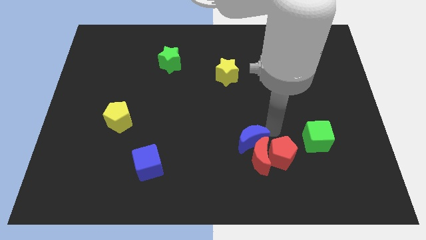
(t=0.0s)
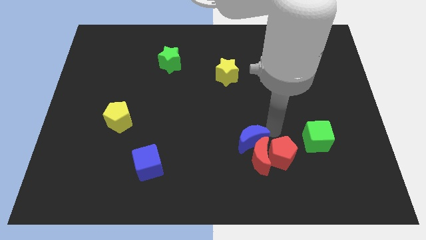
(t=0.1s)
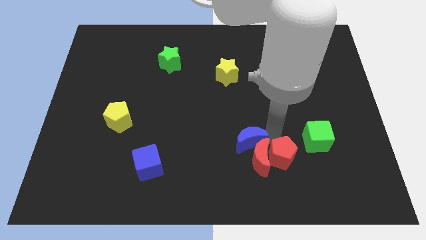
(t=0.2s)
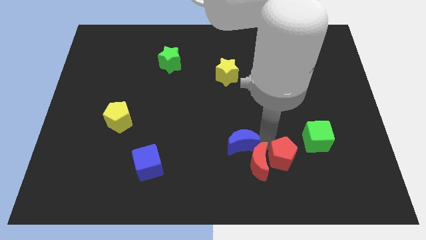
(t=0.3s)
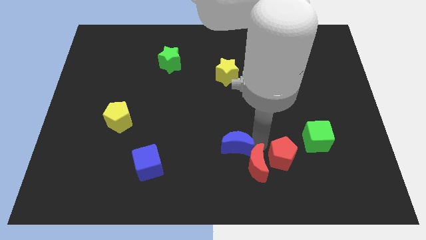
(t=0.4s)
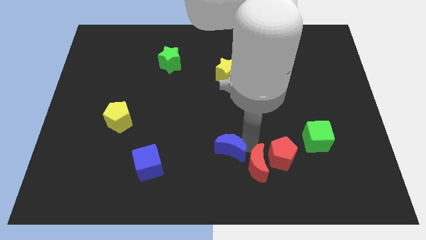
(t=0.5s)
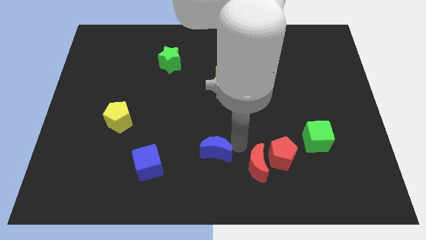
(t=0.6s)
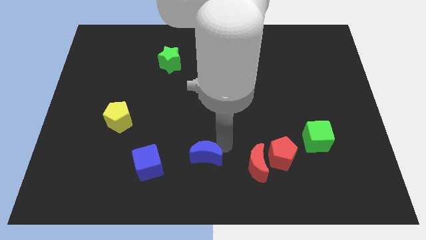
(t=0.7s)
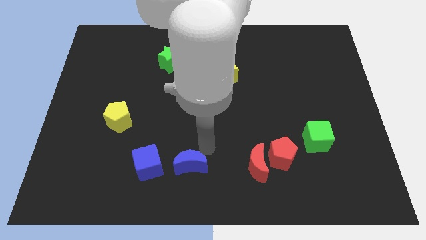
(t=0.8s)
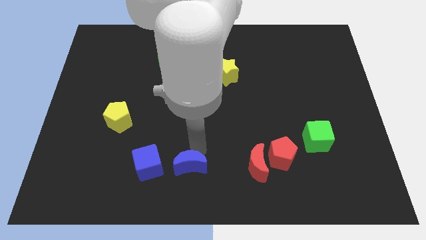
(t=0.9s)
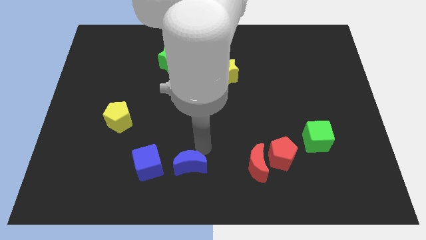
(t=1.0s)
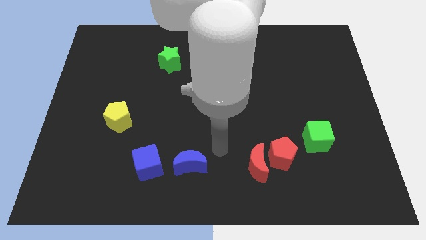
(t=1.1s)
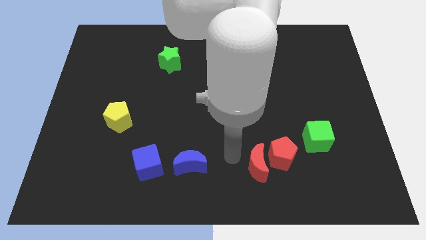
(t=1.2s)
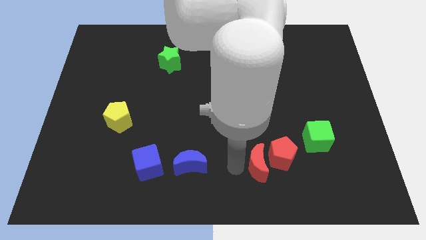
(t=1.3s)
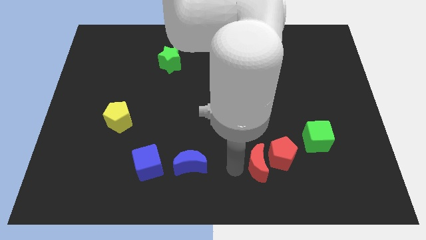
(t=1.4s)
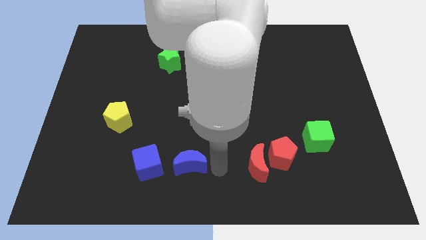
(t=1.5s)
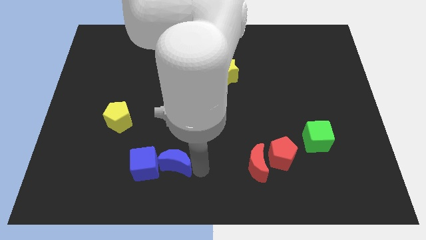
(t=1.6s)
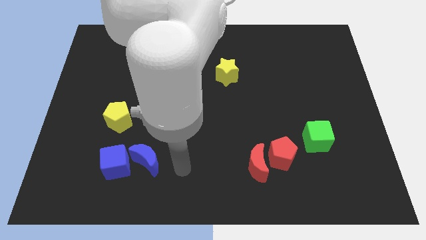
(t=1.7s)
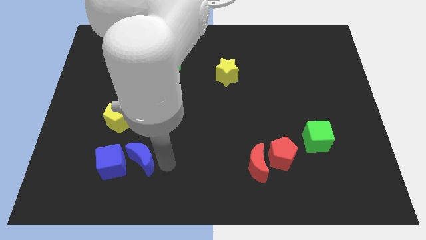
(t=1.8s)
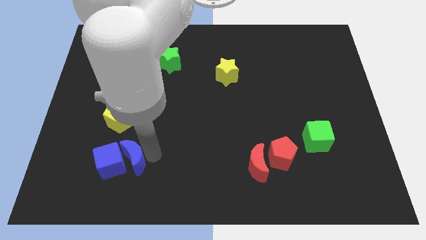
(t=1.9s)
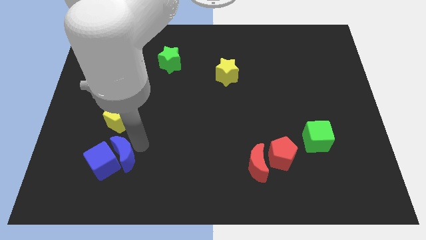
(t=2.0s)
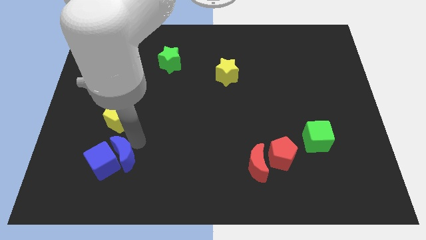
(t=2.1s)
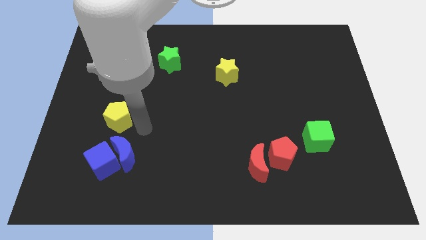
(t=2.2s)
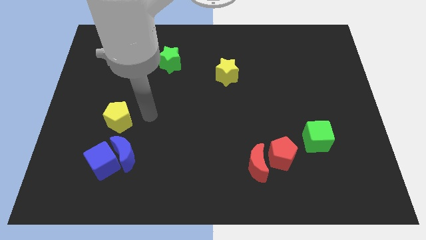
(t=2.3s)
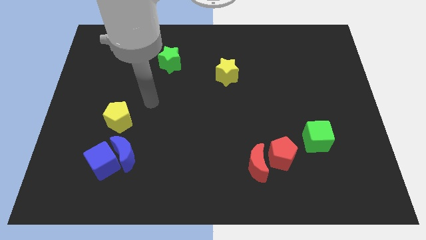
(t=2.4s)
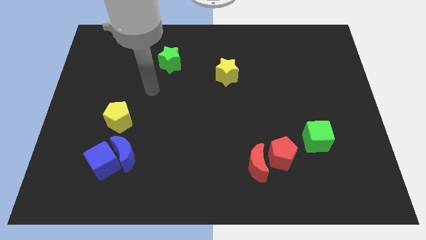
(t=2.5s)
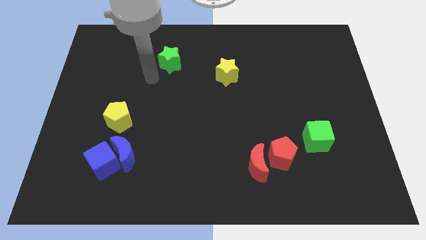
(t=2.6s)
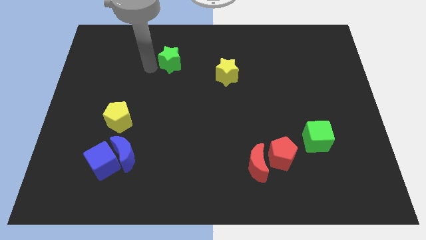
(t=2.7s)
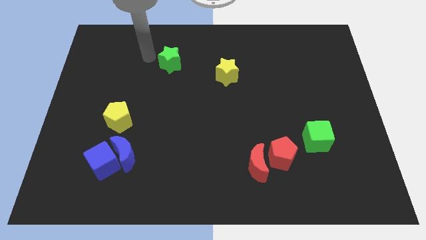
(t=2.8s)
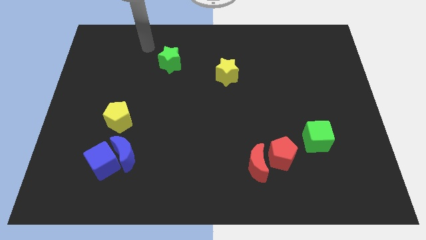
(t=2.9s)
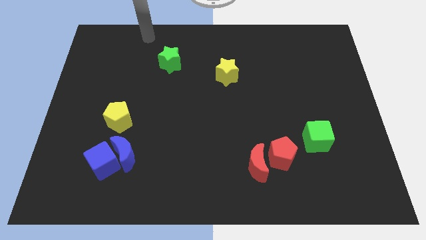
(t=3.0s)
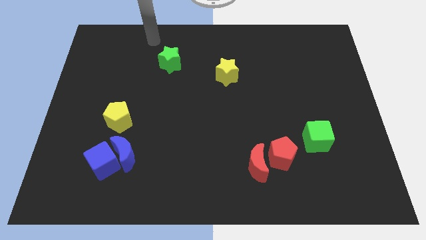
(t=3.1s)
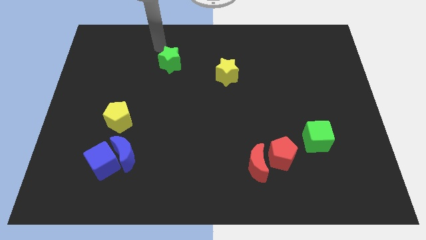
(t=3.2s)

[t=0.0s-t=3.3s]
push the blue crescent into the blue cube

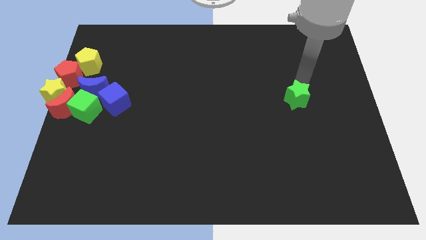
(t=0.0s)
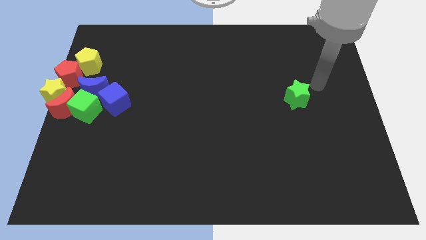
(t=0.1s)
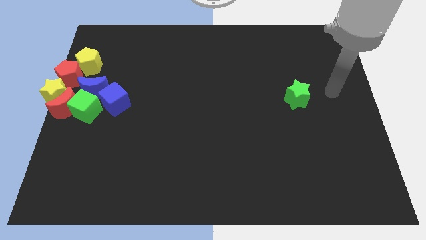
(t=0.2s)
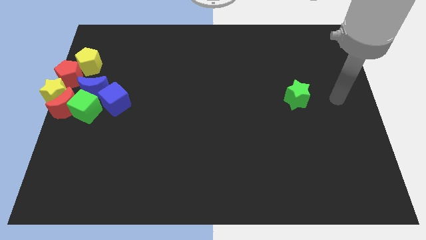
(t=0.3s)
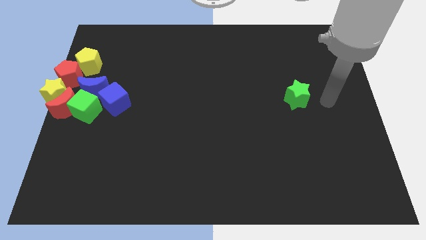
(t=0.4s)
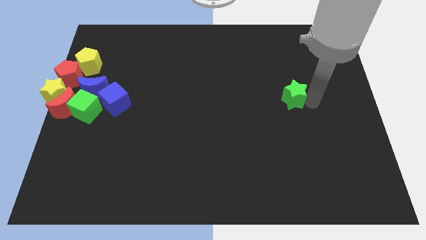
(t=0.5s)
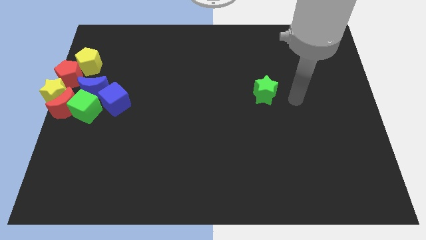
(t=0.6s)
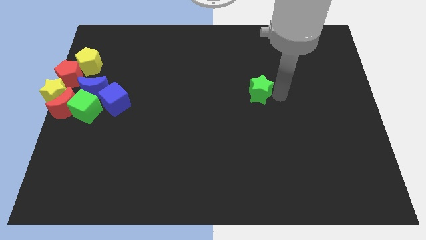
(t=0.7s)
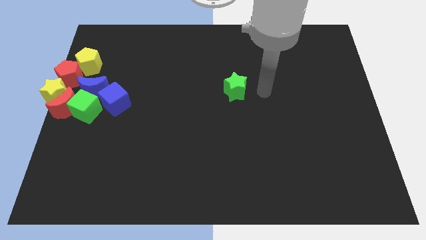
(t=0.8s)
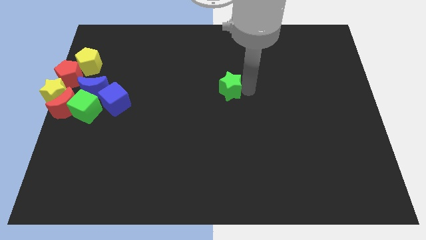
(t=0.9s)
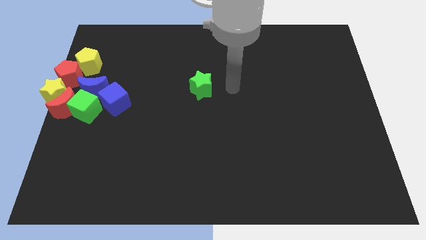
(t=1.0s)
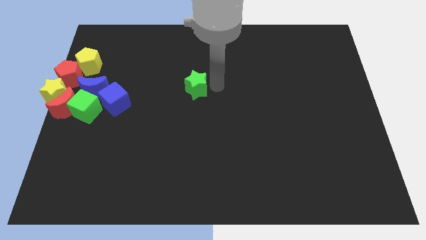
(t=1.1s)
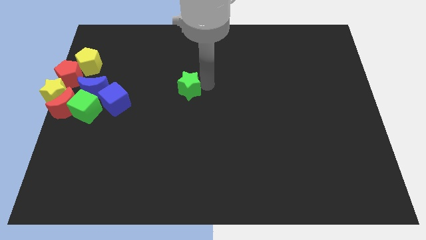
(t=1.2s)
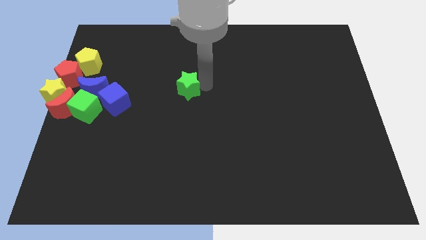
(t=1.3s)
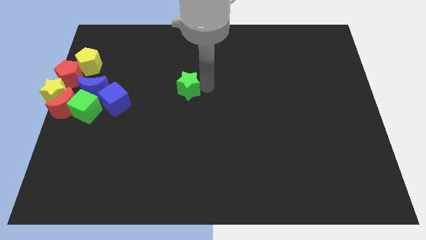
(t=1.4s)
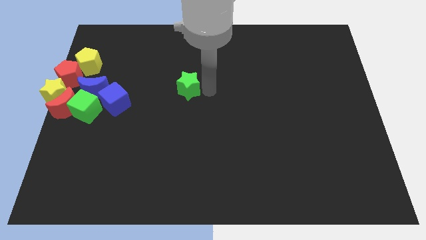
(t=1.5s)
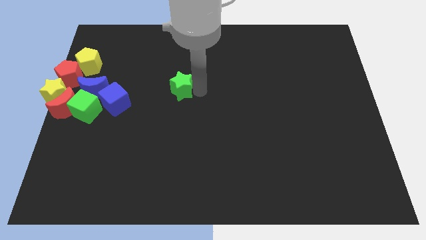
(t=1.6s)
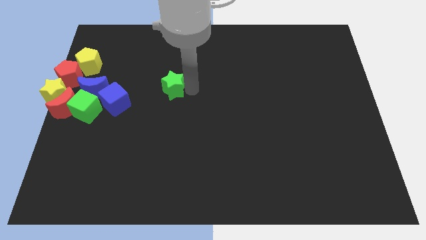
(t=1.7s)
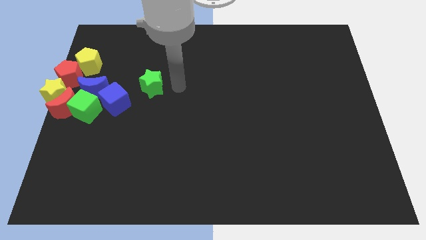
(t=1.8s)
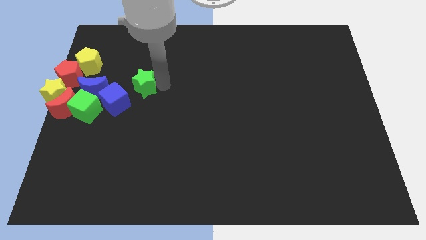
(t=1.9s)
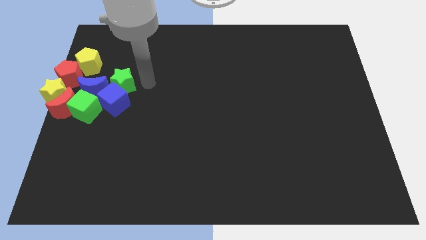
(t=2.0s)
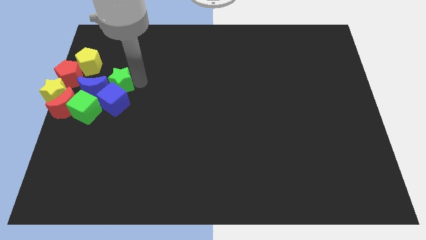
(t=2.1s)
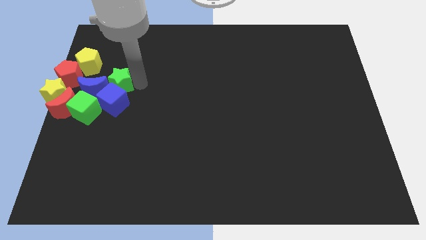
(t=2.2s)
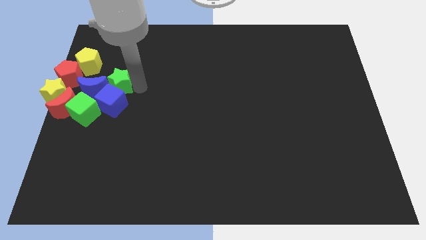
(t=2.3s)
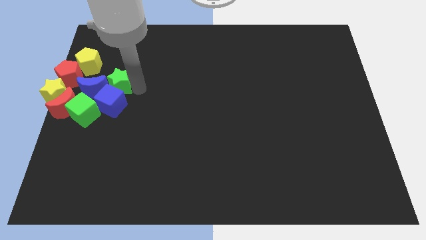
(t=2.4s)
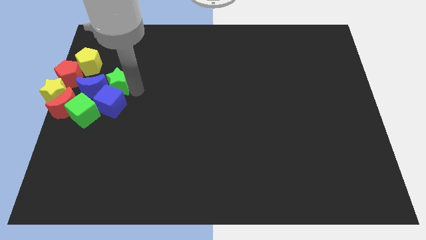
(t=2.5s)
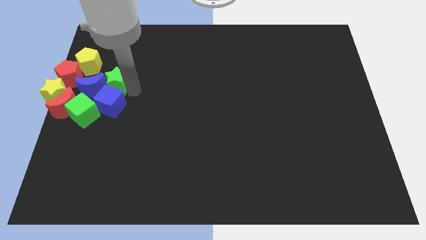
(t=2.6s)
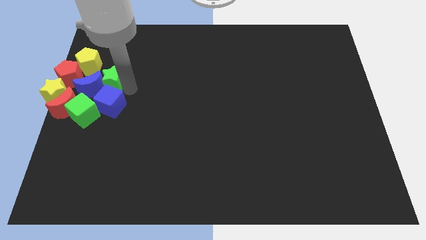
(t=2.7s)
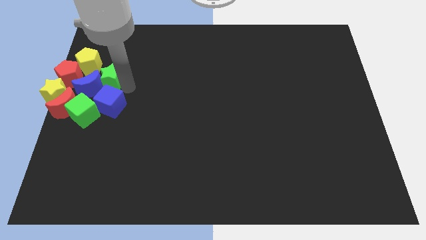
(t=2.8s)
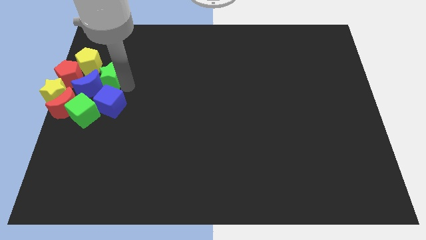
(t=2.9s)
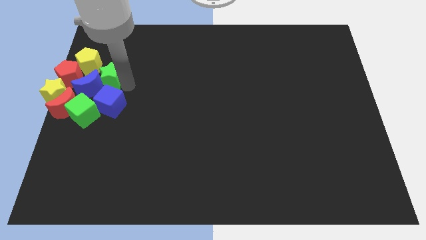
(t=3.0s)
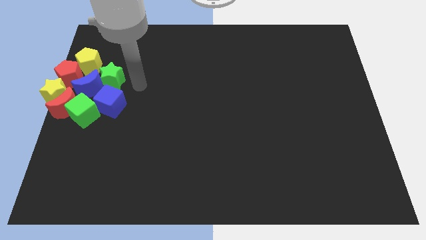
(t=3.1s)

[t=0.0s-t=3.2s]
push the green star into a group of blocks

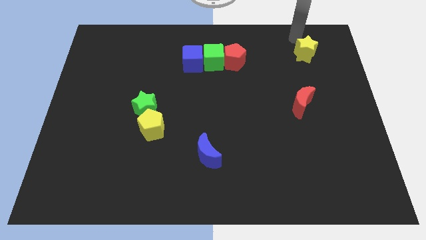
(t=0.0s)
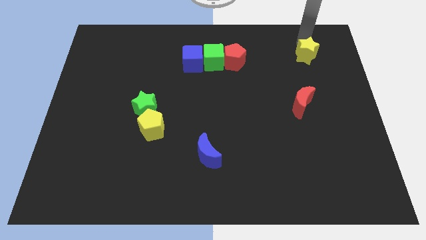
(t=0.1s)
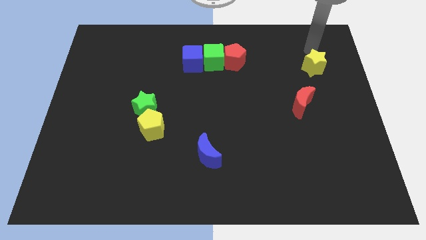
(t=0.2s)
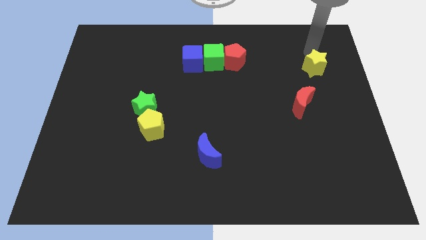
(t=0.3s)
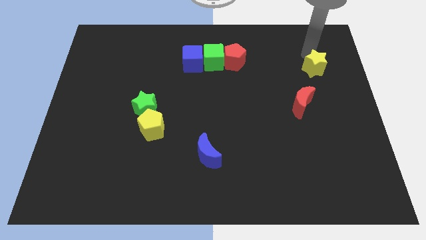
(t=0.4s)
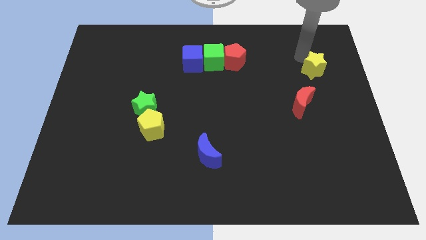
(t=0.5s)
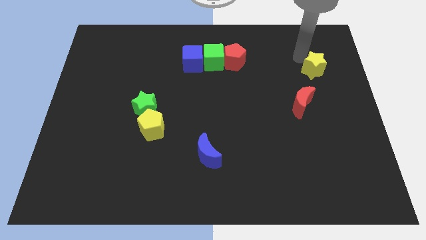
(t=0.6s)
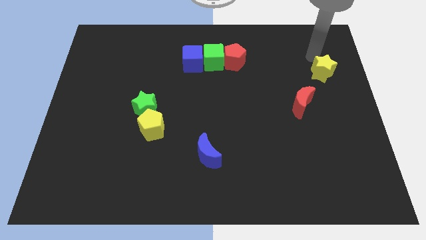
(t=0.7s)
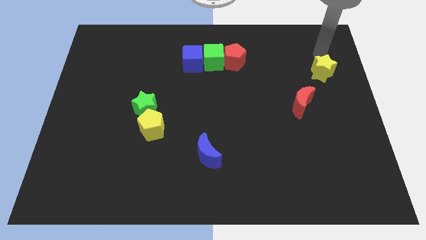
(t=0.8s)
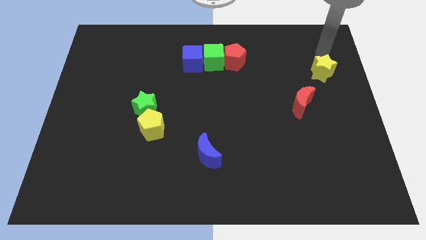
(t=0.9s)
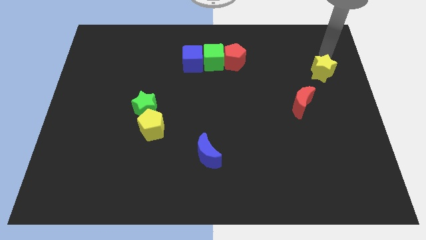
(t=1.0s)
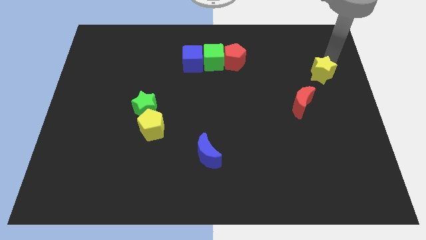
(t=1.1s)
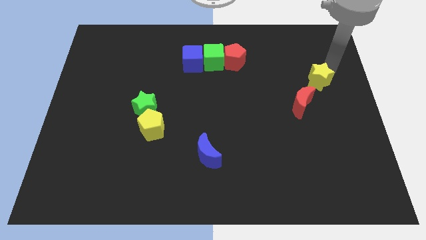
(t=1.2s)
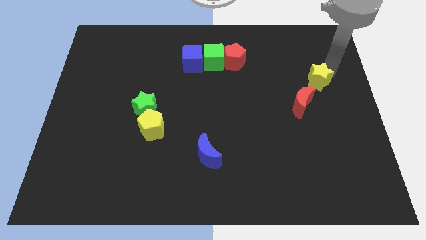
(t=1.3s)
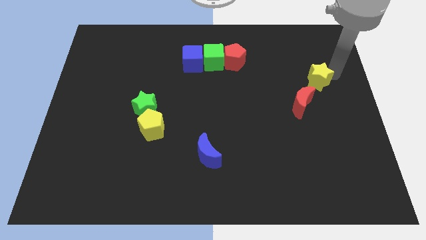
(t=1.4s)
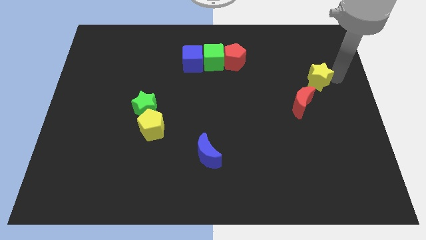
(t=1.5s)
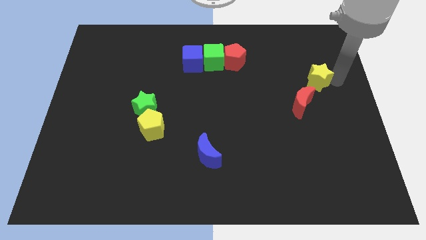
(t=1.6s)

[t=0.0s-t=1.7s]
place a yellow star at the top of the red moon

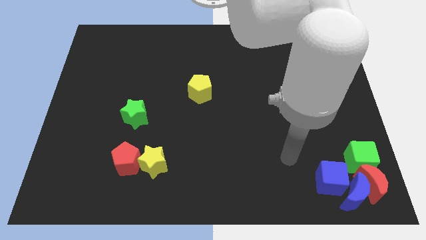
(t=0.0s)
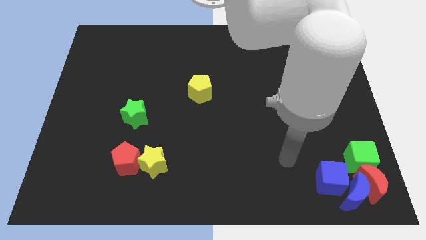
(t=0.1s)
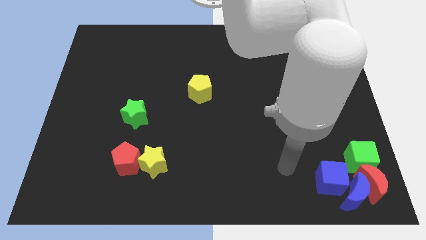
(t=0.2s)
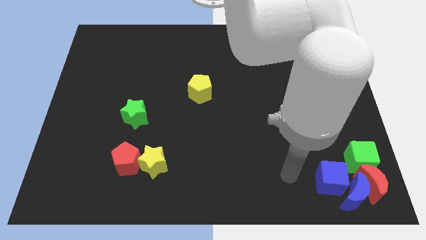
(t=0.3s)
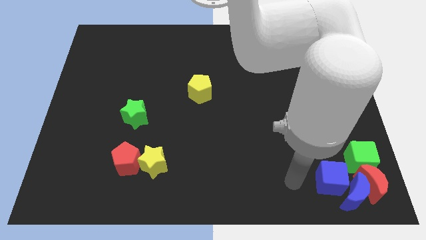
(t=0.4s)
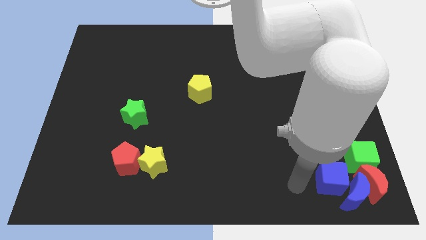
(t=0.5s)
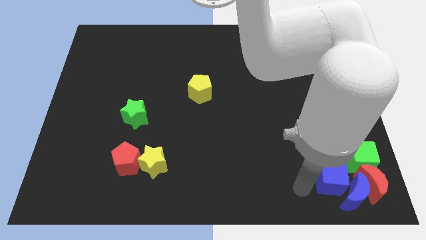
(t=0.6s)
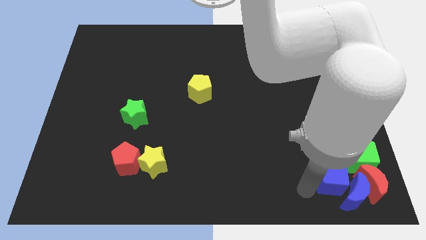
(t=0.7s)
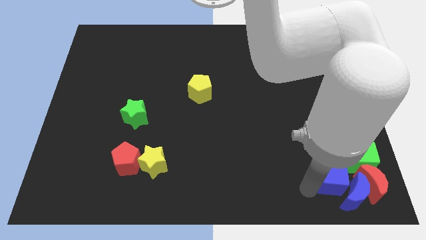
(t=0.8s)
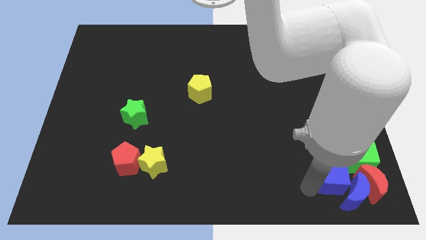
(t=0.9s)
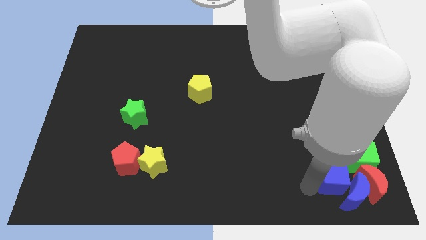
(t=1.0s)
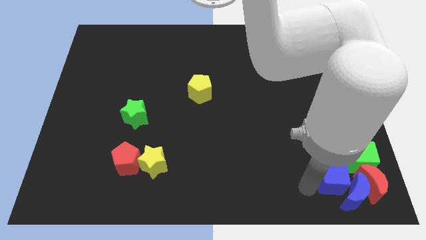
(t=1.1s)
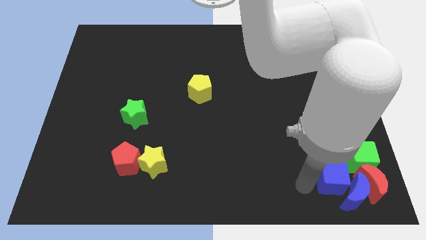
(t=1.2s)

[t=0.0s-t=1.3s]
place the arm to the left of the blue cube
